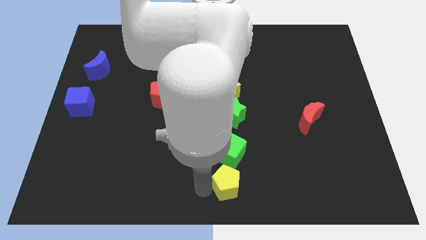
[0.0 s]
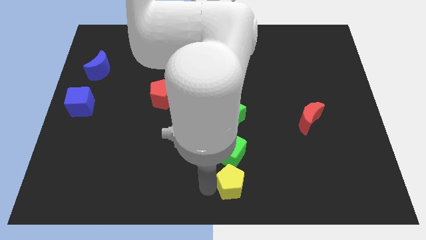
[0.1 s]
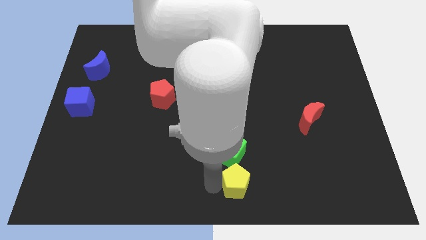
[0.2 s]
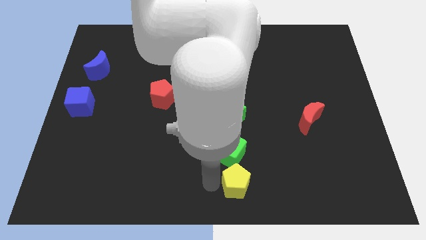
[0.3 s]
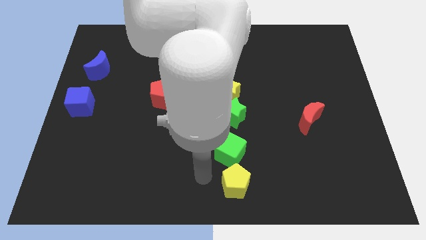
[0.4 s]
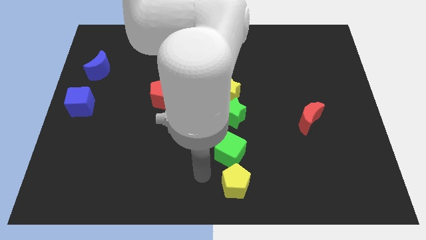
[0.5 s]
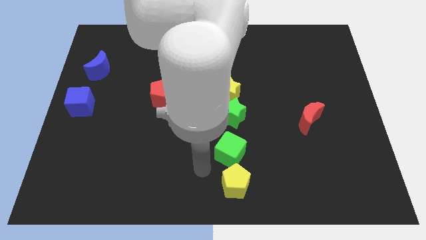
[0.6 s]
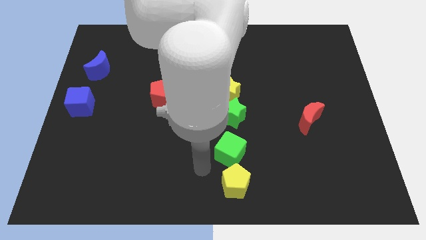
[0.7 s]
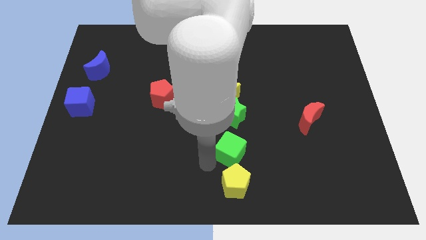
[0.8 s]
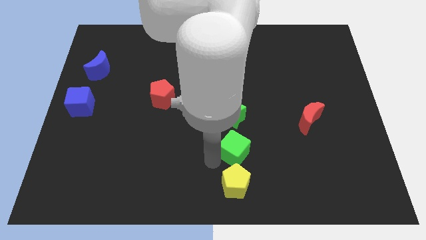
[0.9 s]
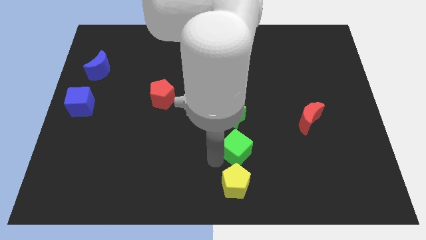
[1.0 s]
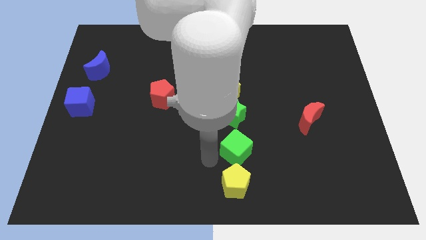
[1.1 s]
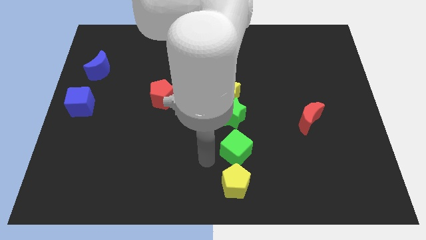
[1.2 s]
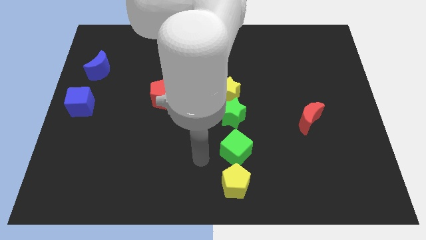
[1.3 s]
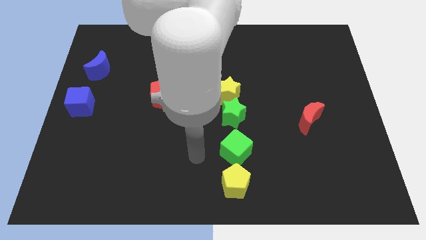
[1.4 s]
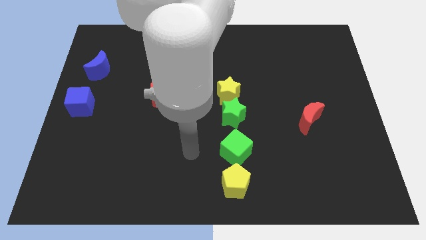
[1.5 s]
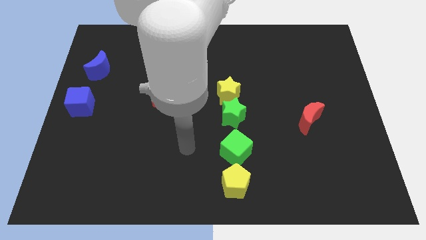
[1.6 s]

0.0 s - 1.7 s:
adjust the green cube and yellow pentagon

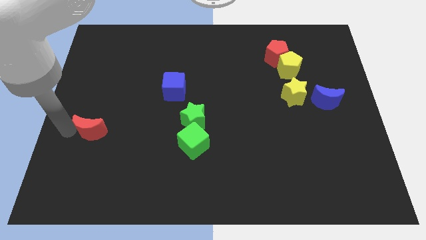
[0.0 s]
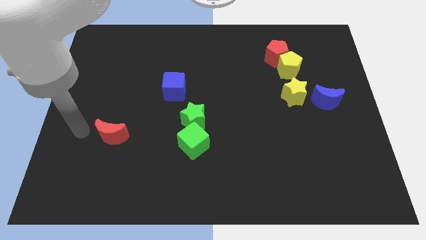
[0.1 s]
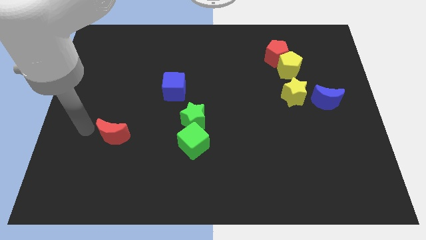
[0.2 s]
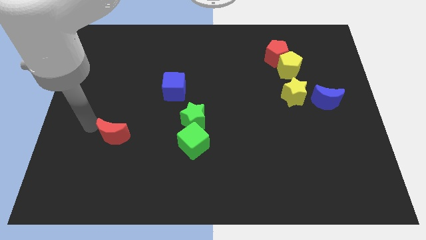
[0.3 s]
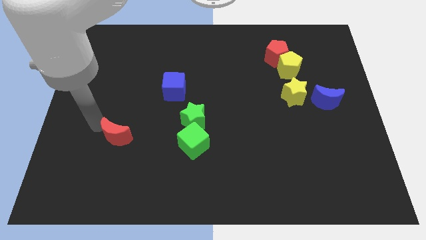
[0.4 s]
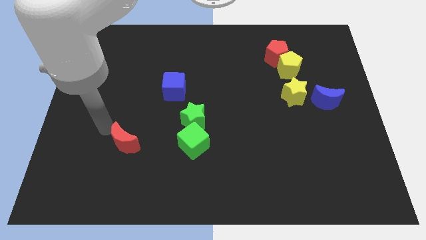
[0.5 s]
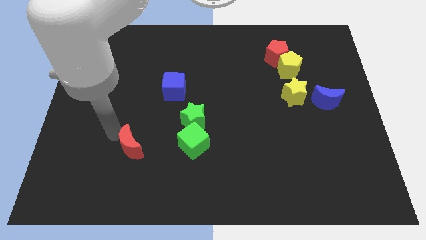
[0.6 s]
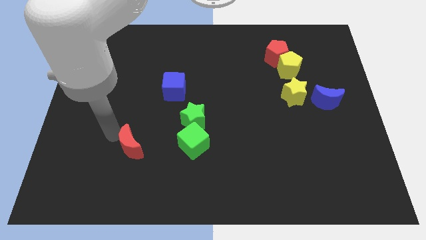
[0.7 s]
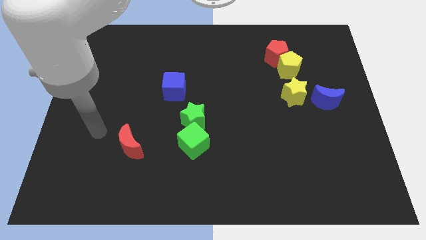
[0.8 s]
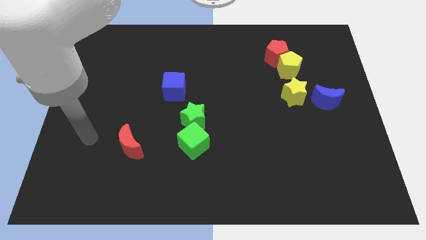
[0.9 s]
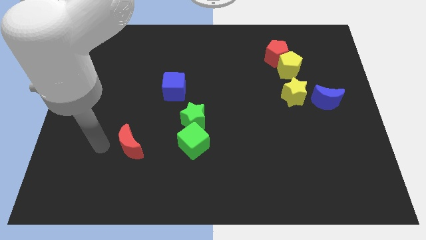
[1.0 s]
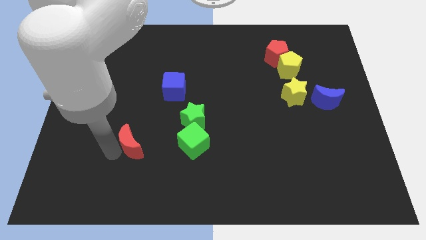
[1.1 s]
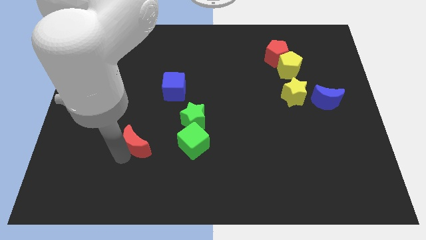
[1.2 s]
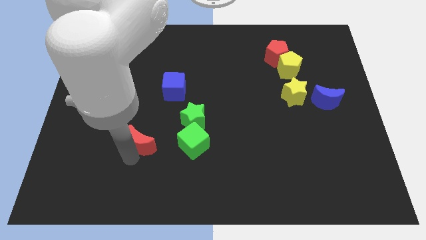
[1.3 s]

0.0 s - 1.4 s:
put the red moon parallel to green cube

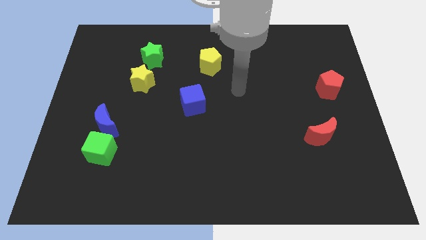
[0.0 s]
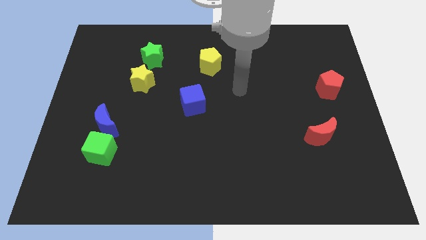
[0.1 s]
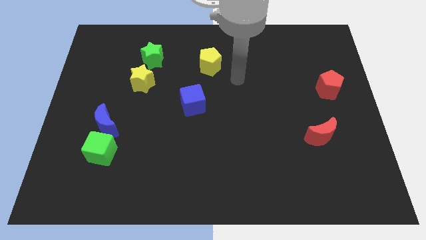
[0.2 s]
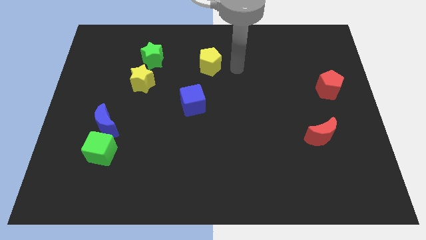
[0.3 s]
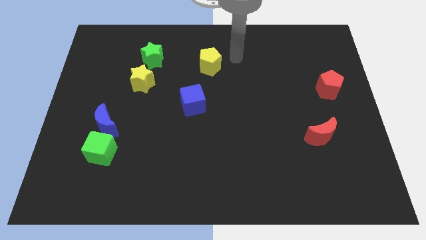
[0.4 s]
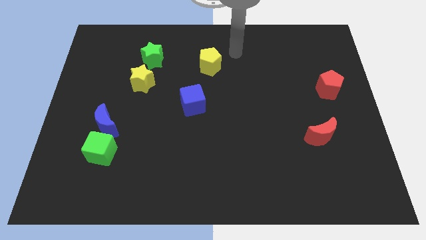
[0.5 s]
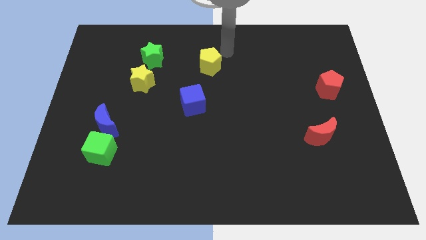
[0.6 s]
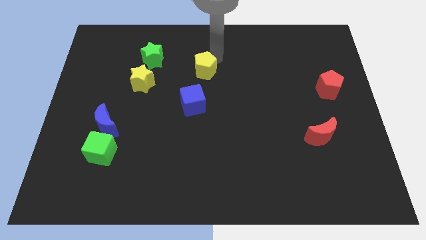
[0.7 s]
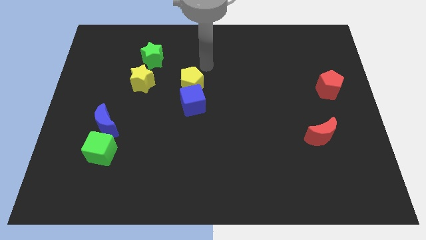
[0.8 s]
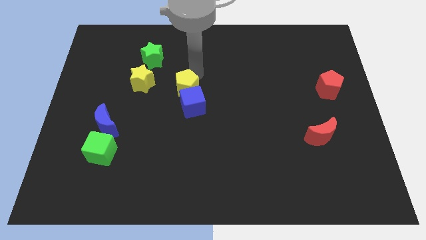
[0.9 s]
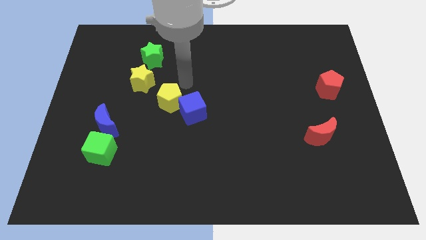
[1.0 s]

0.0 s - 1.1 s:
slide the yellow pentagon diagonally top left to the blue cube

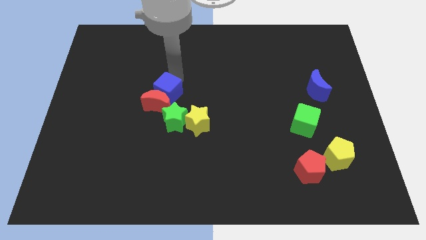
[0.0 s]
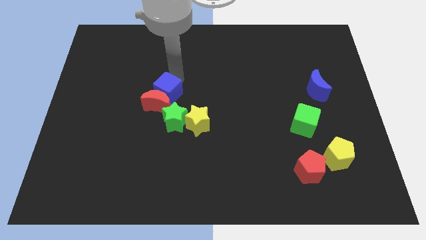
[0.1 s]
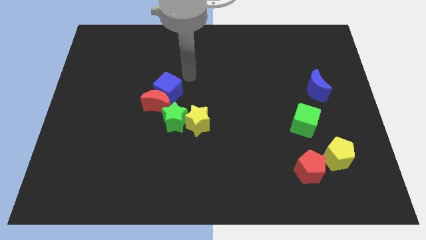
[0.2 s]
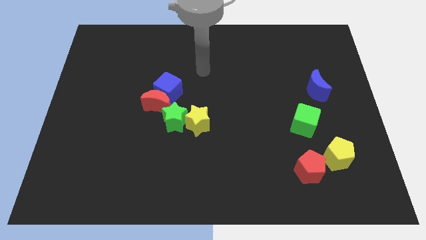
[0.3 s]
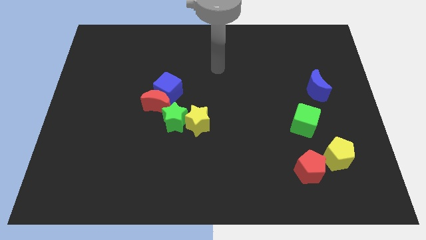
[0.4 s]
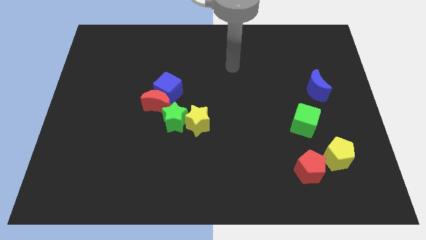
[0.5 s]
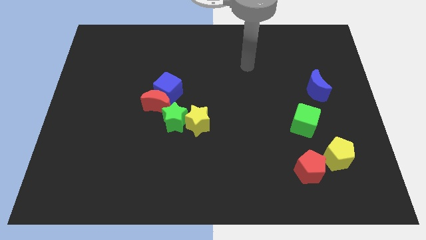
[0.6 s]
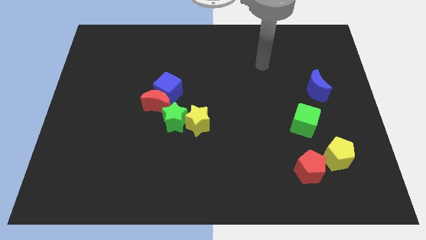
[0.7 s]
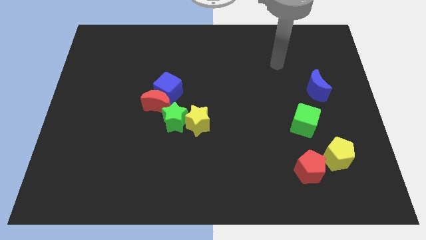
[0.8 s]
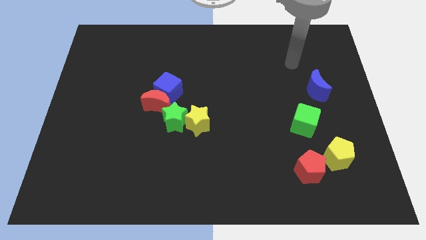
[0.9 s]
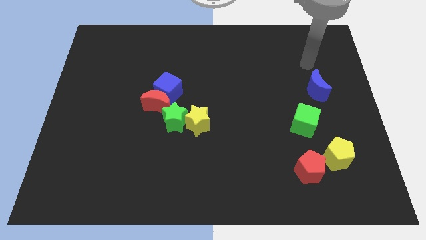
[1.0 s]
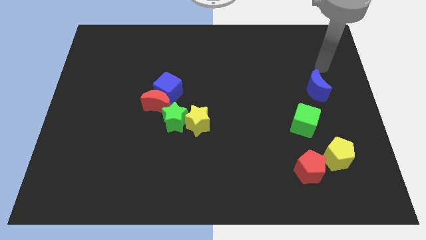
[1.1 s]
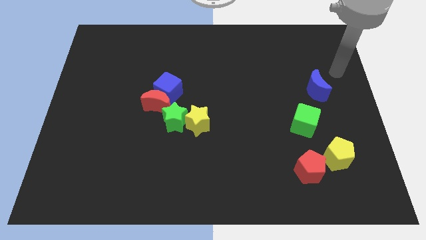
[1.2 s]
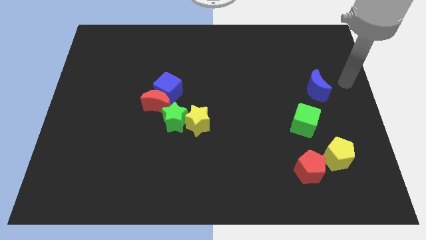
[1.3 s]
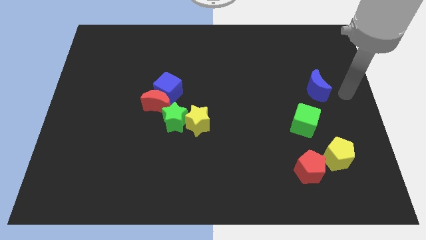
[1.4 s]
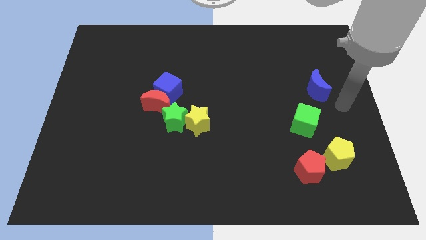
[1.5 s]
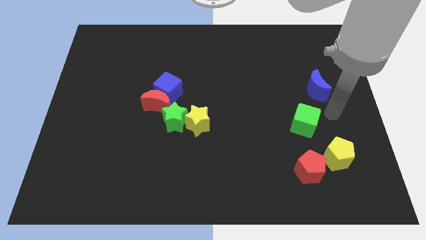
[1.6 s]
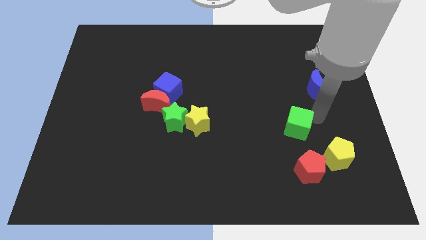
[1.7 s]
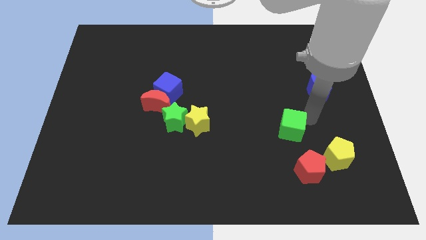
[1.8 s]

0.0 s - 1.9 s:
tab the right side of the green cube

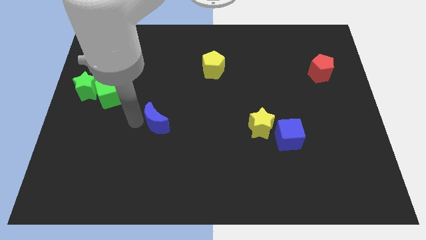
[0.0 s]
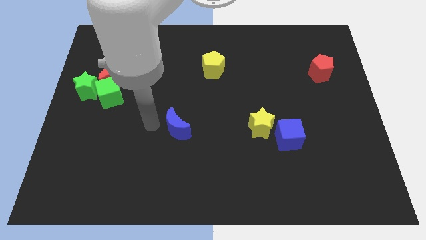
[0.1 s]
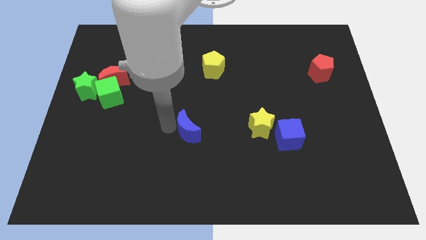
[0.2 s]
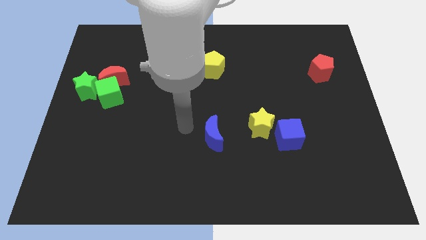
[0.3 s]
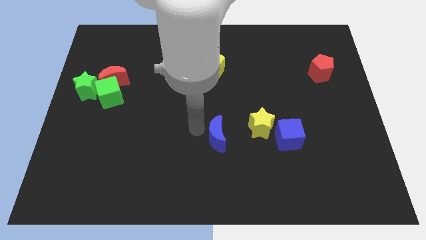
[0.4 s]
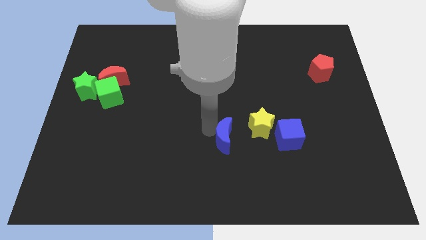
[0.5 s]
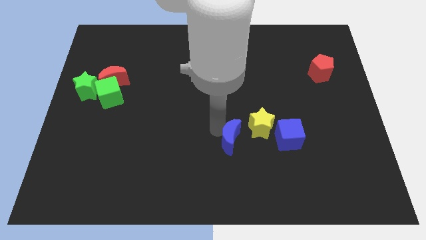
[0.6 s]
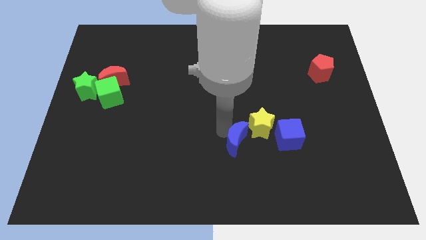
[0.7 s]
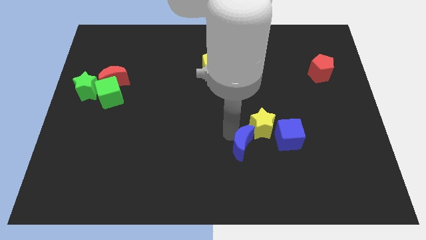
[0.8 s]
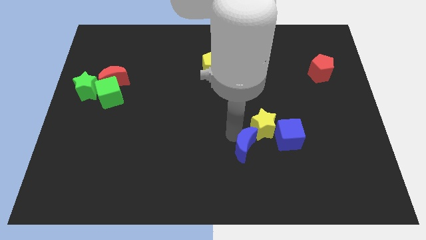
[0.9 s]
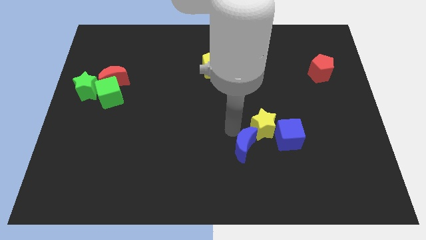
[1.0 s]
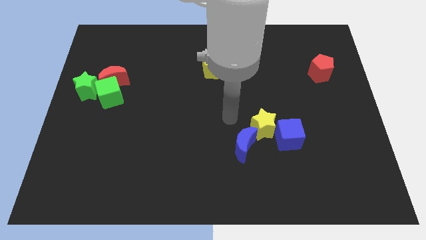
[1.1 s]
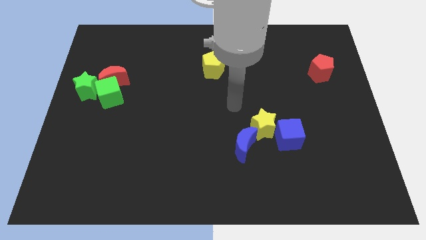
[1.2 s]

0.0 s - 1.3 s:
move the blue crescent into the yellow star

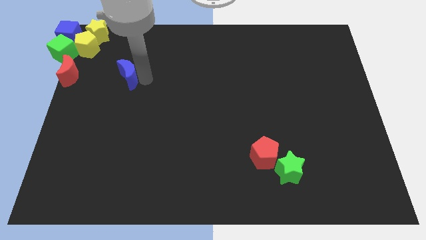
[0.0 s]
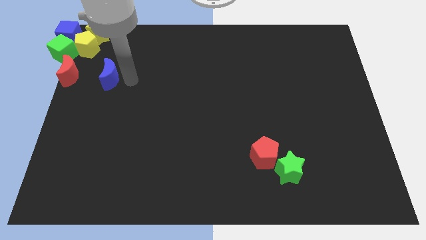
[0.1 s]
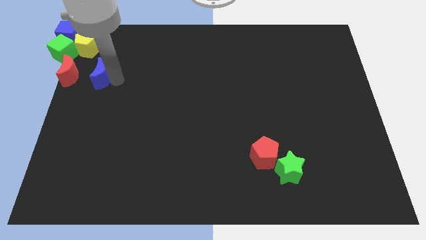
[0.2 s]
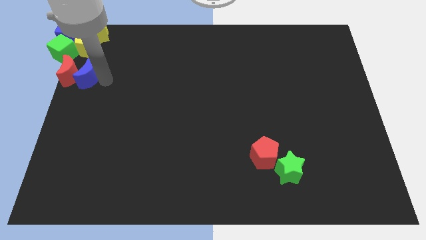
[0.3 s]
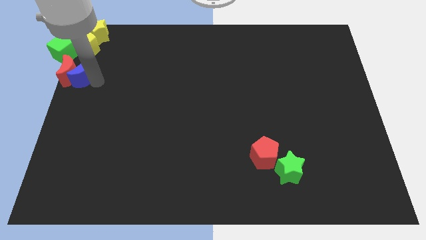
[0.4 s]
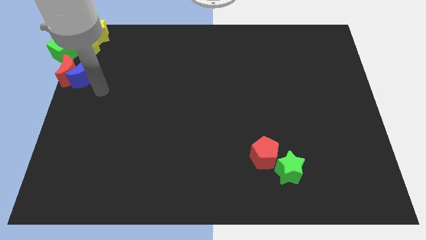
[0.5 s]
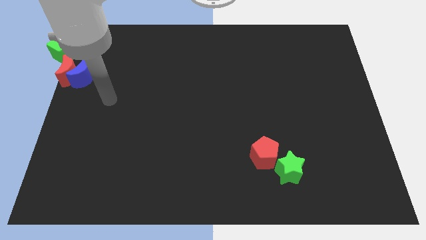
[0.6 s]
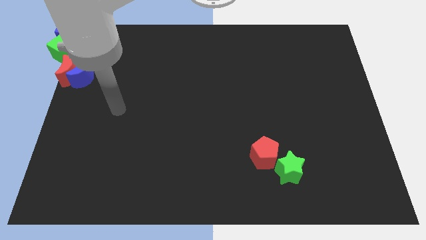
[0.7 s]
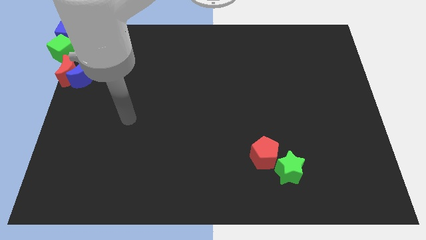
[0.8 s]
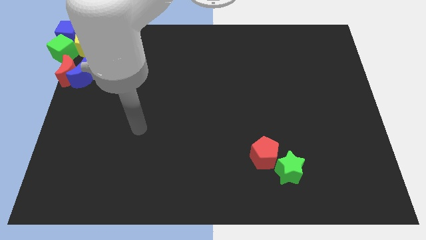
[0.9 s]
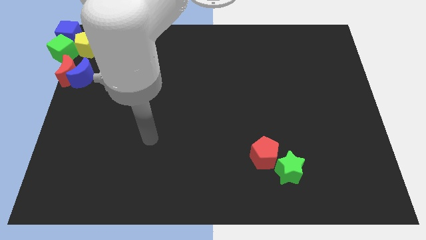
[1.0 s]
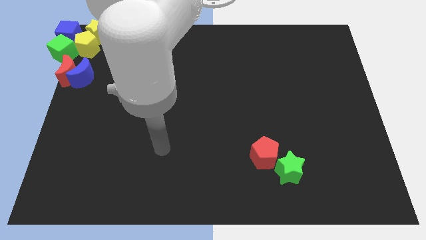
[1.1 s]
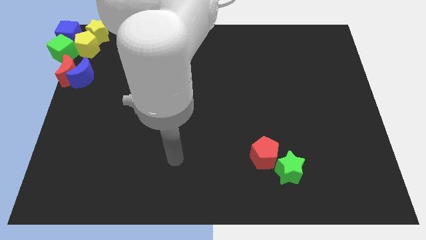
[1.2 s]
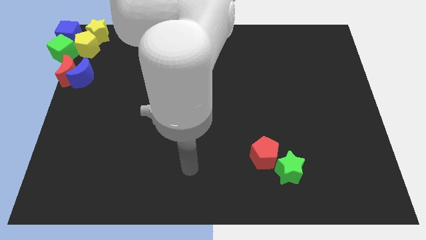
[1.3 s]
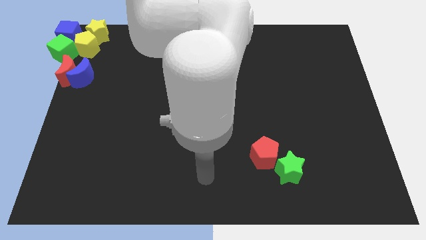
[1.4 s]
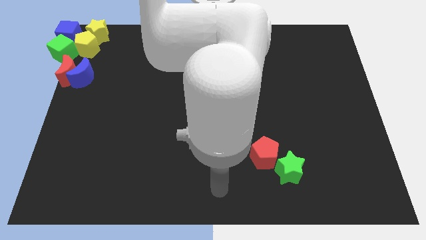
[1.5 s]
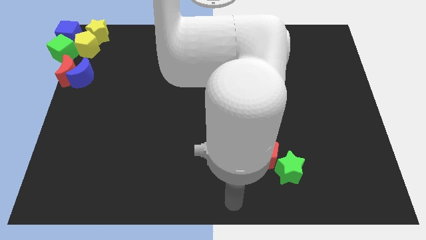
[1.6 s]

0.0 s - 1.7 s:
push the blue crescent into the red moon
